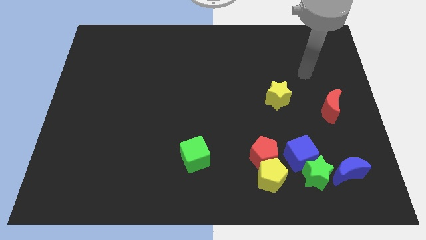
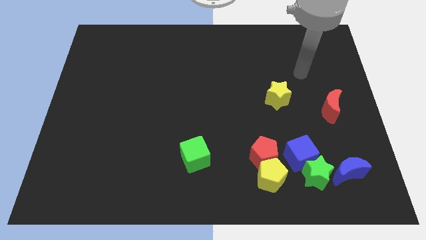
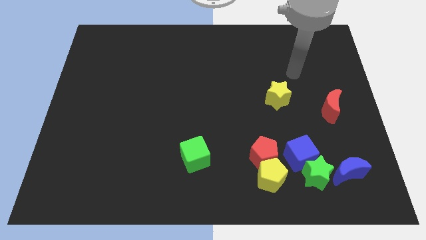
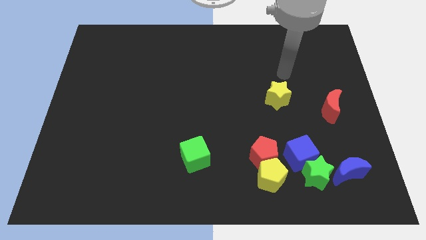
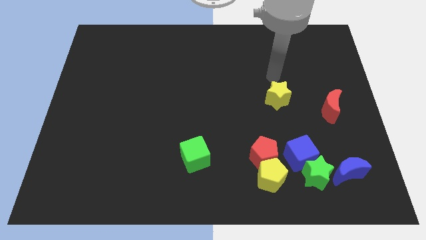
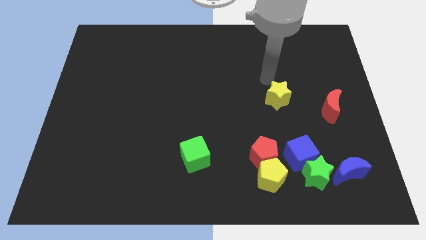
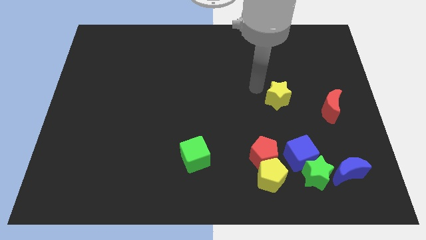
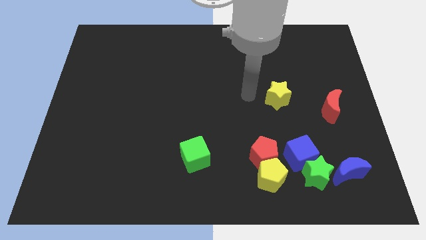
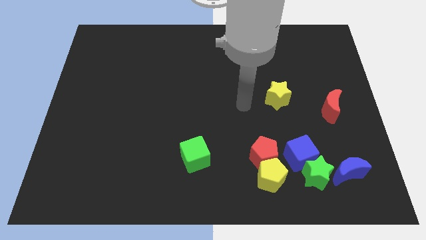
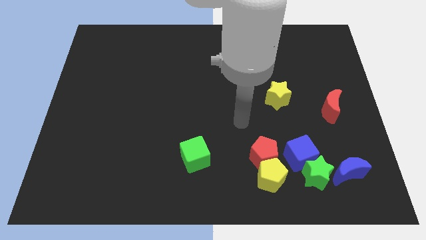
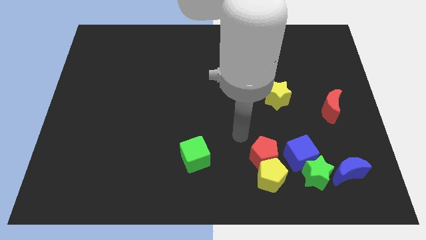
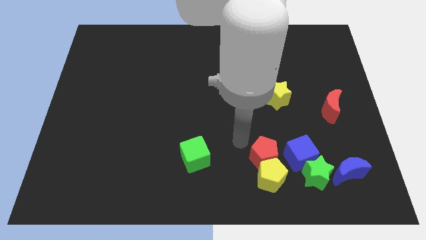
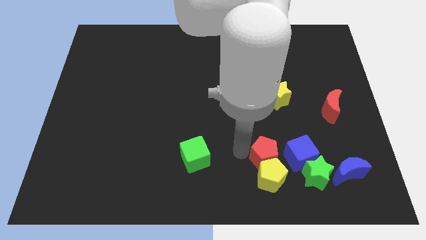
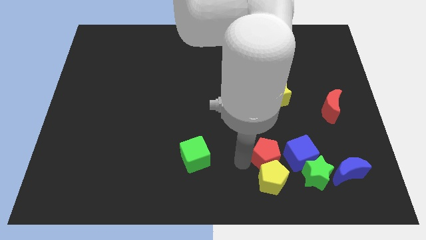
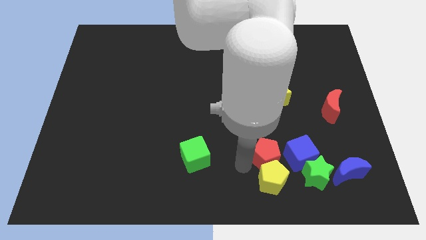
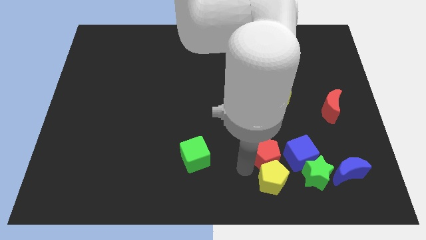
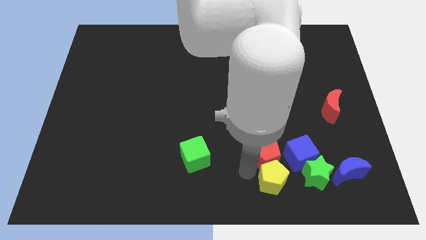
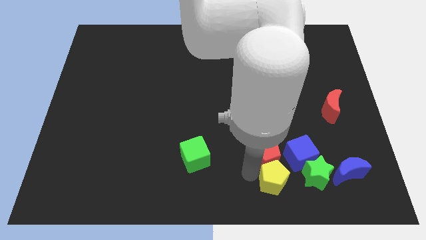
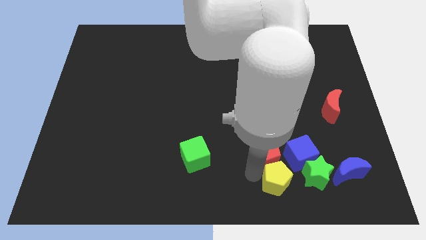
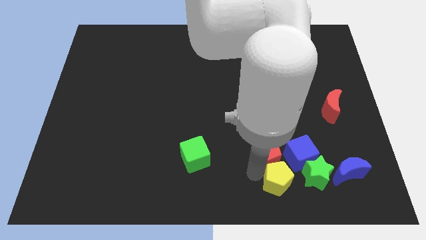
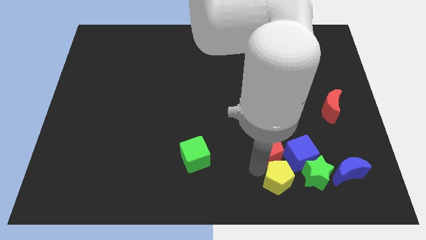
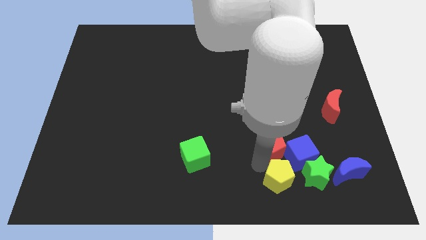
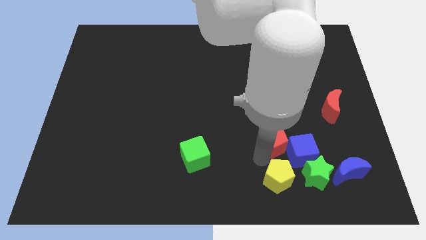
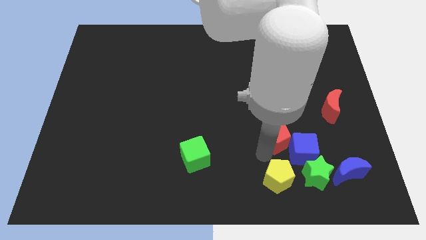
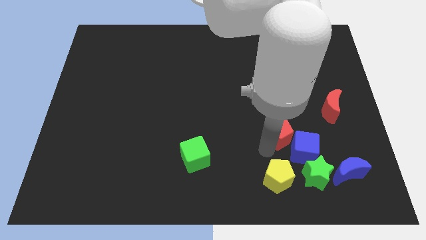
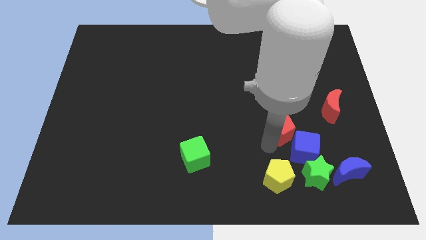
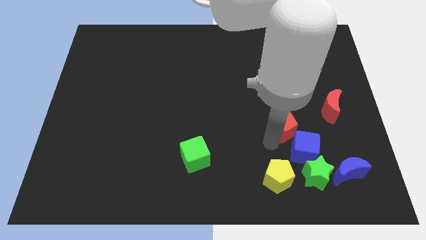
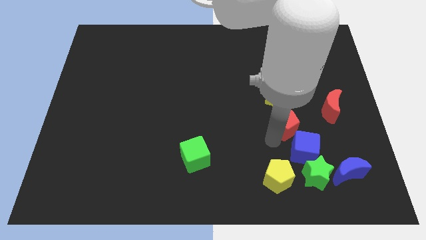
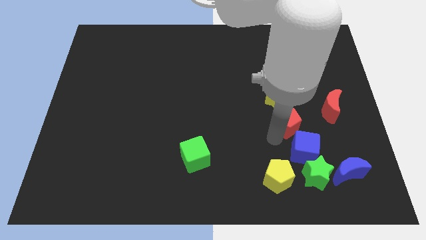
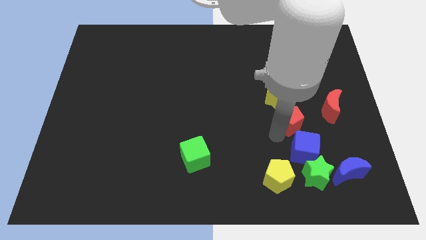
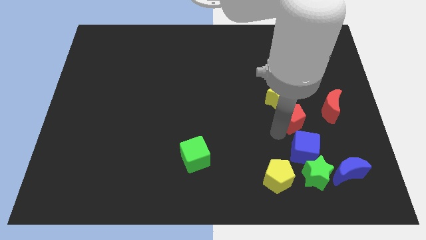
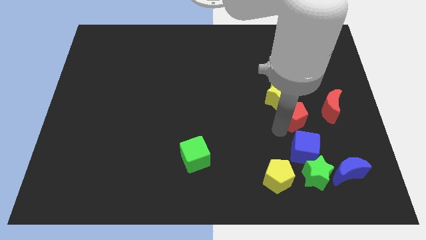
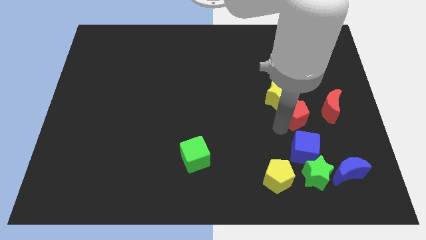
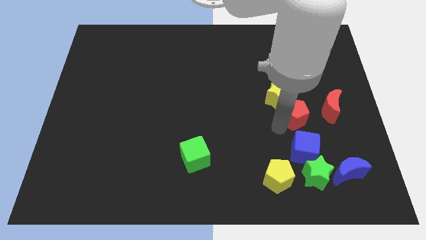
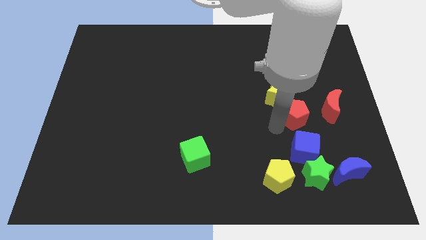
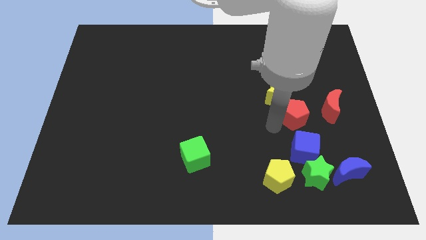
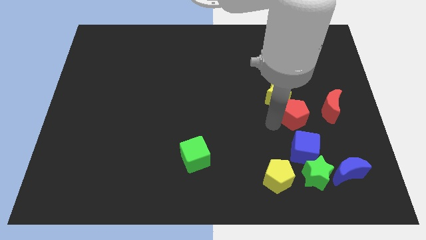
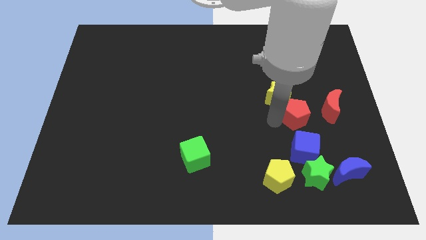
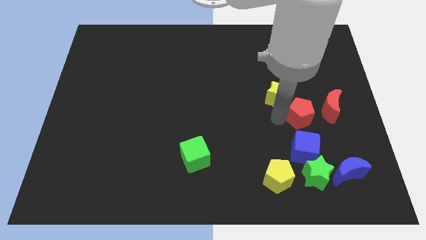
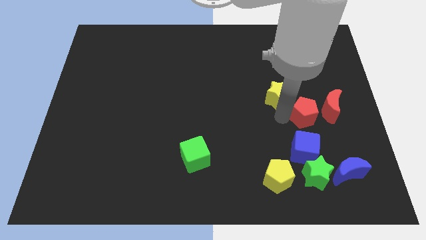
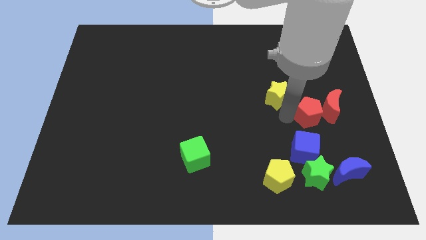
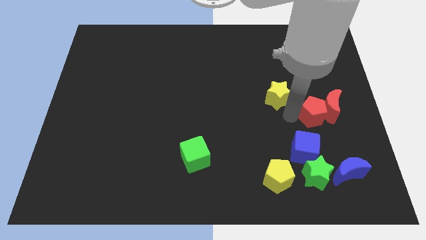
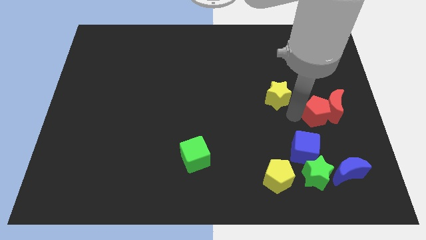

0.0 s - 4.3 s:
put the red pentagon next to the red moon

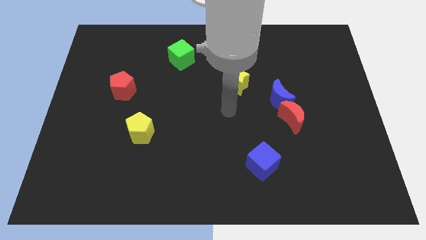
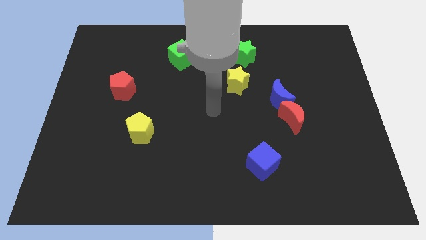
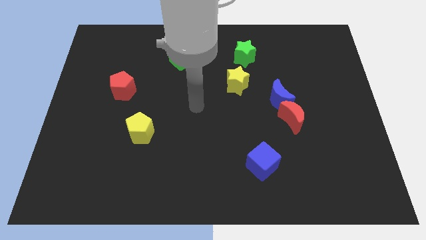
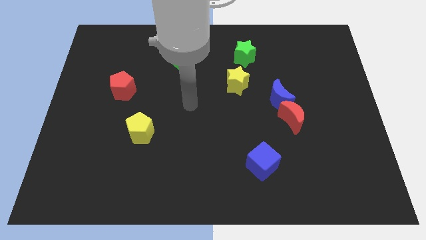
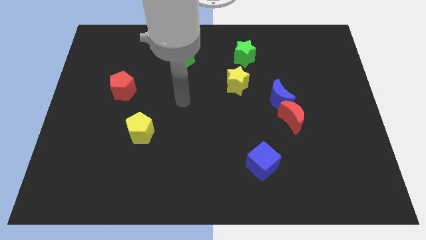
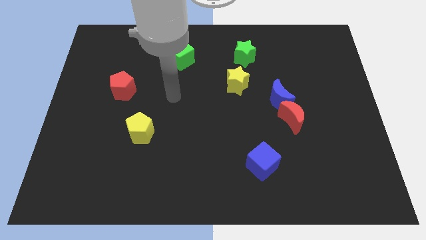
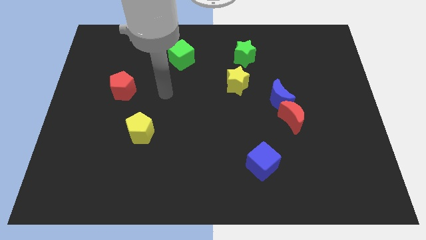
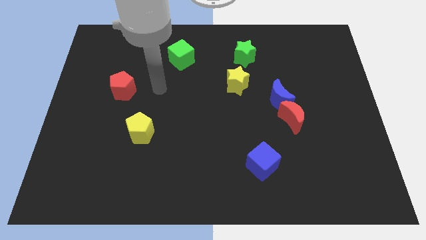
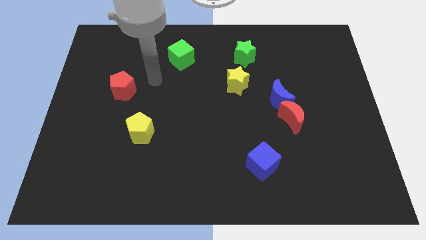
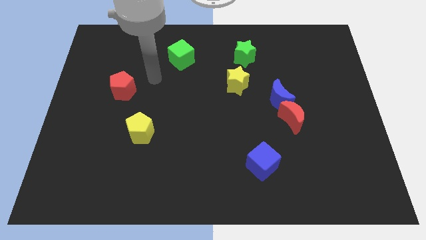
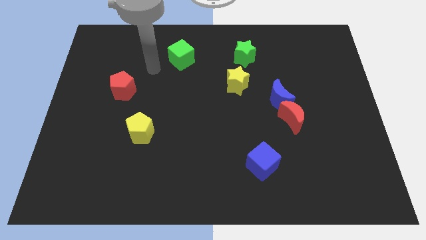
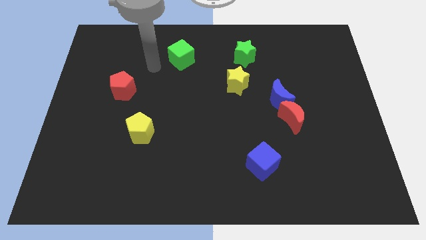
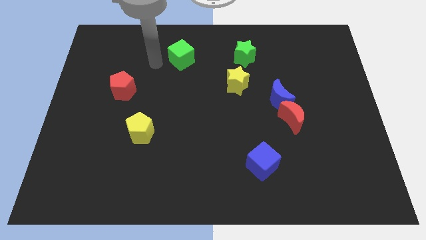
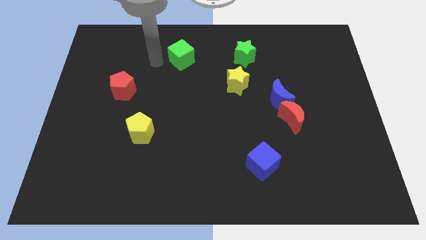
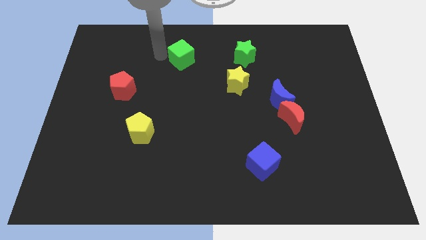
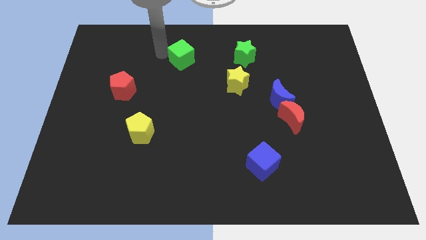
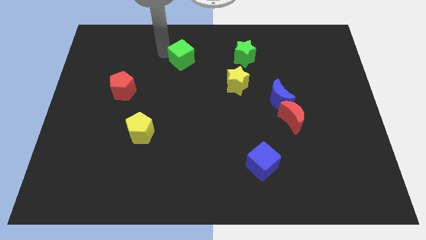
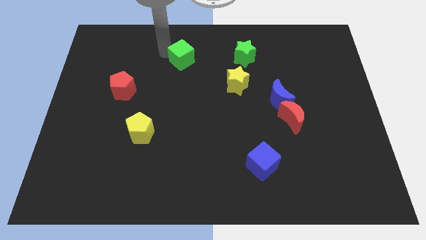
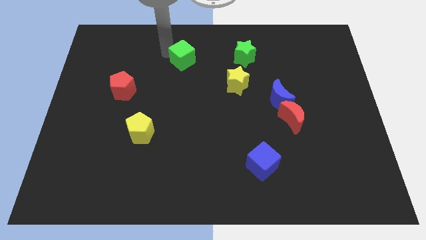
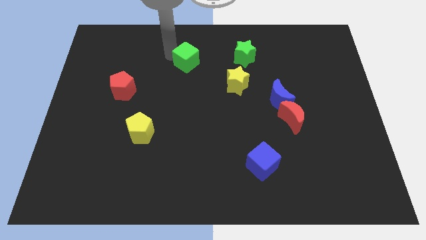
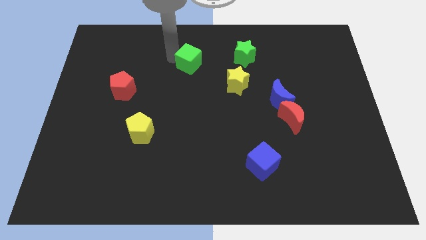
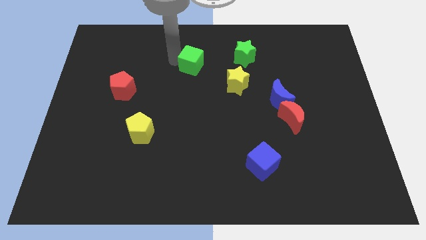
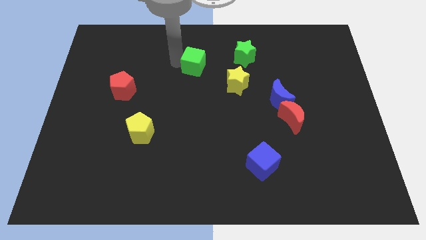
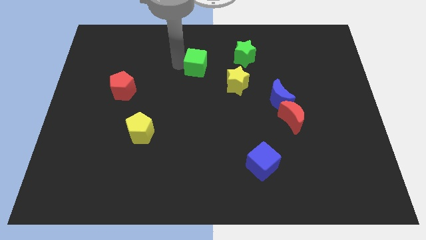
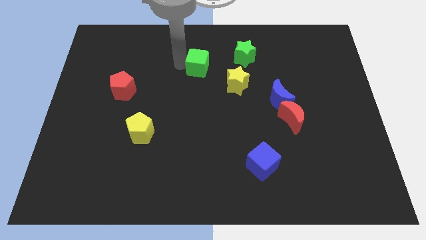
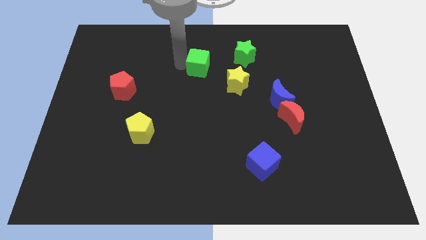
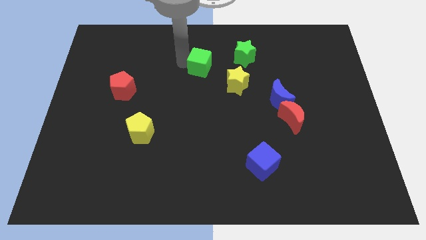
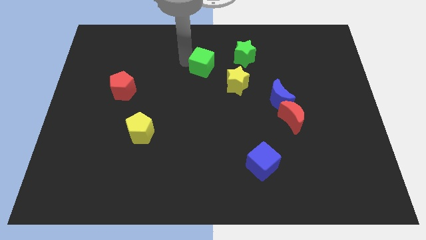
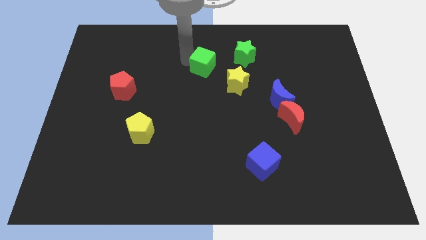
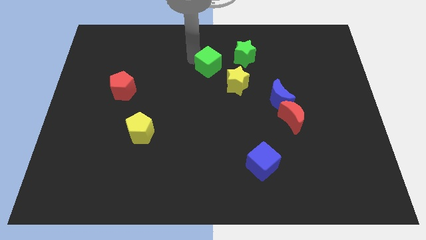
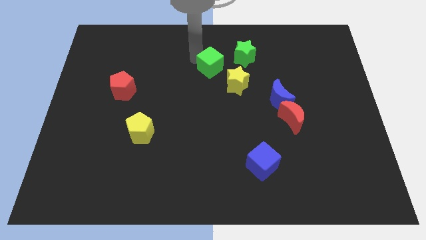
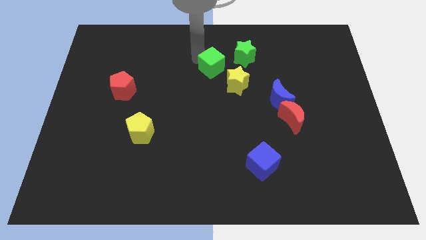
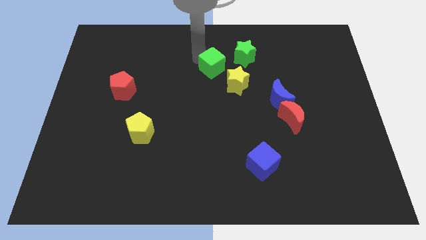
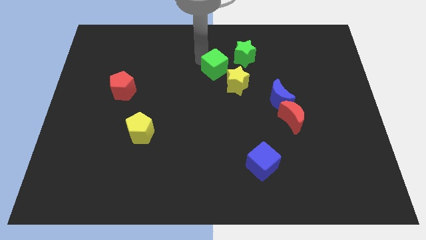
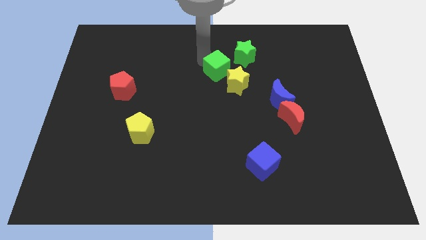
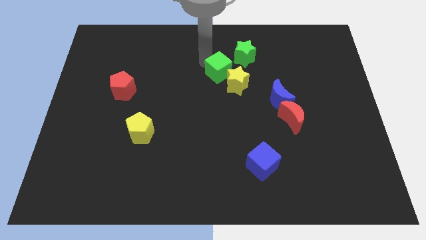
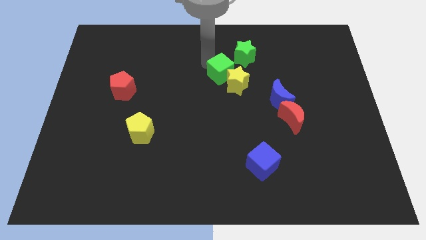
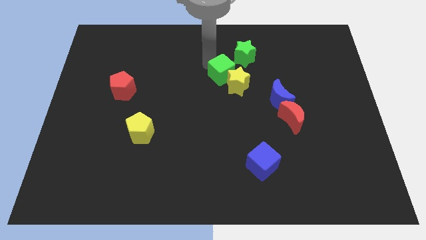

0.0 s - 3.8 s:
move the green cube next to the yellow star

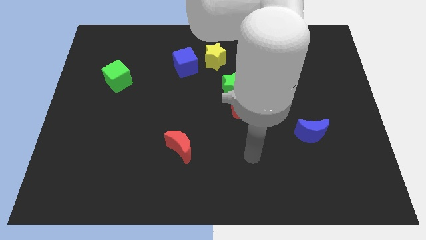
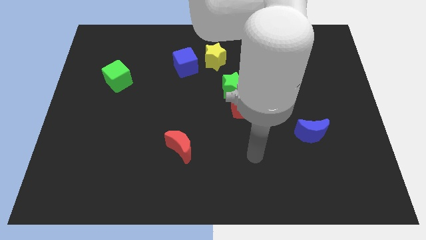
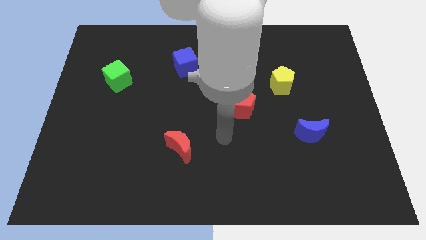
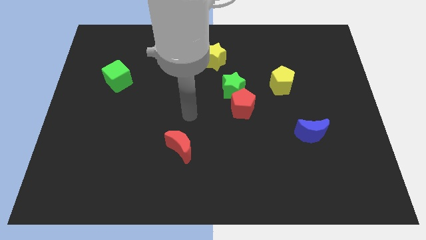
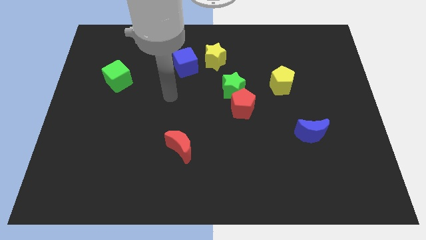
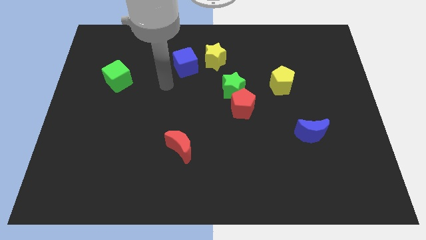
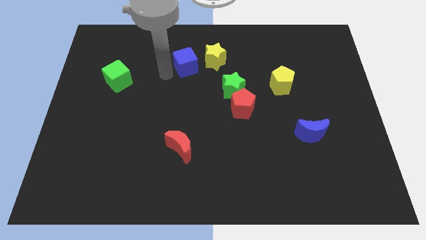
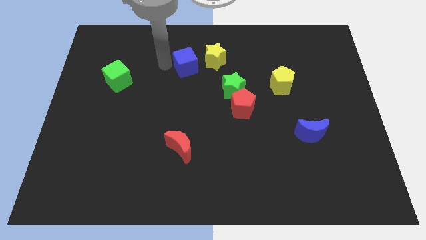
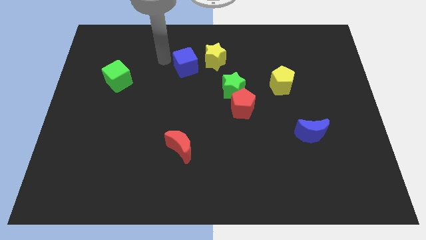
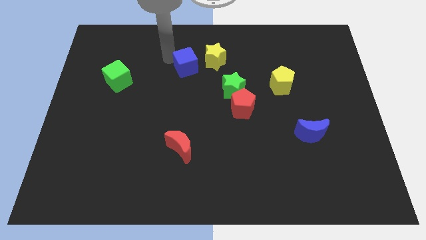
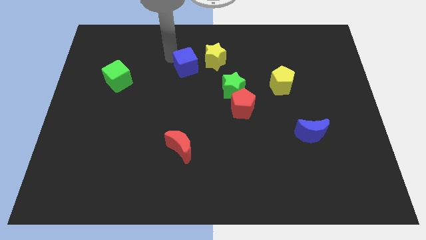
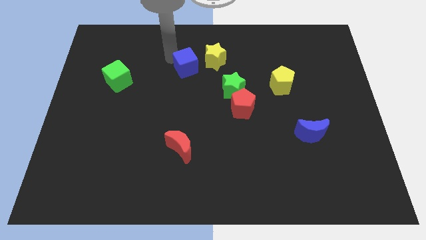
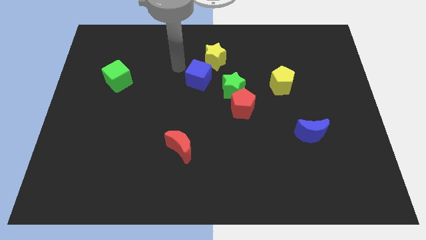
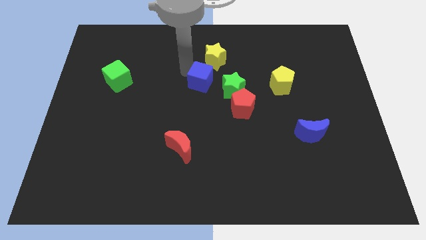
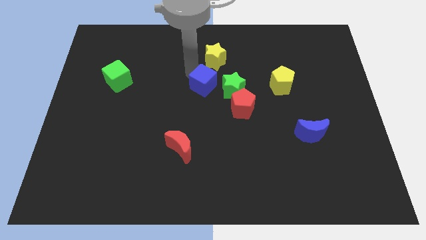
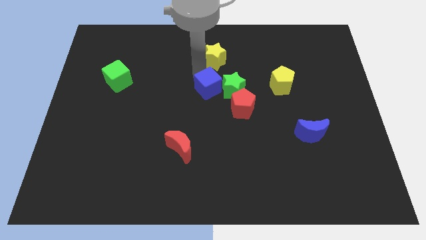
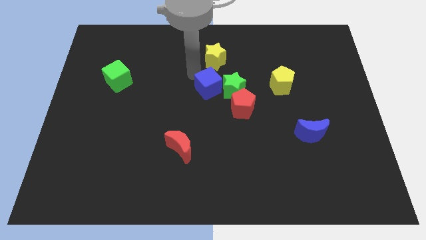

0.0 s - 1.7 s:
move the blue cube close to the green star
